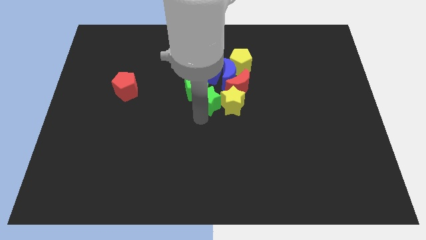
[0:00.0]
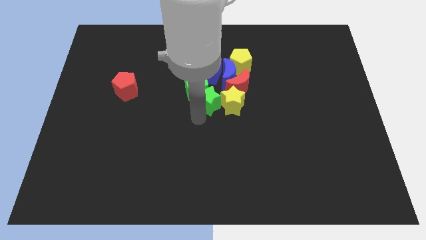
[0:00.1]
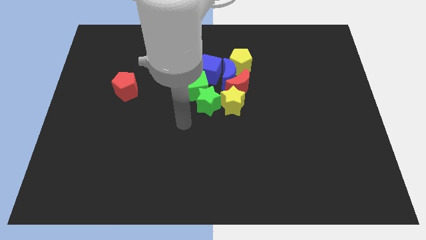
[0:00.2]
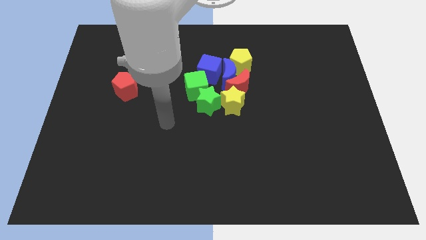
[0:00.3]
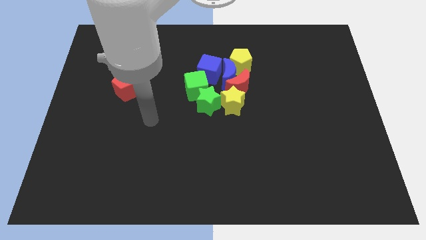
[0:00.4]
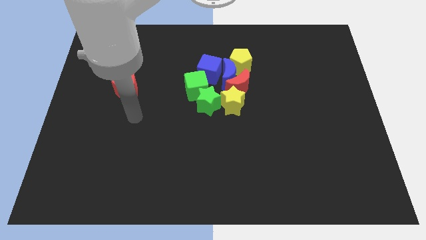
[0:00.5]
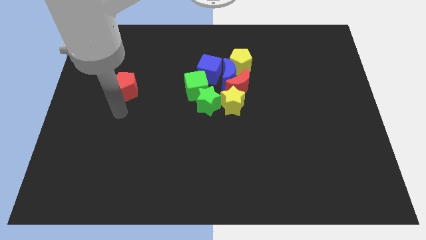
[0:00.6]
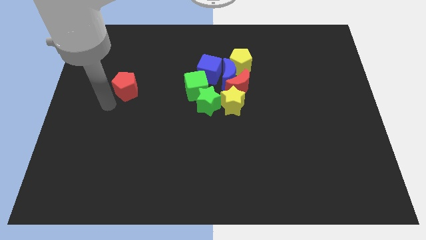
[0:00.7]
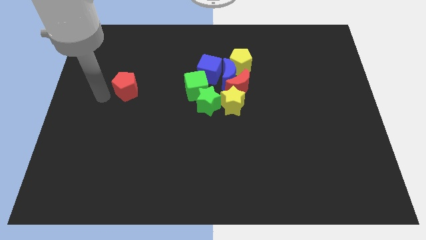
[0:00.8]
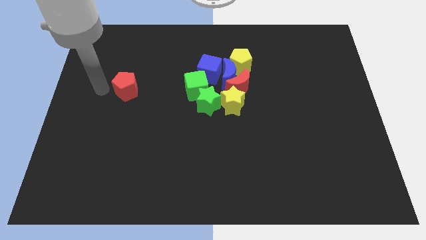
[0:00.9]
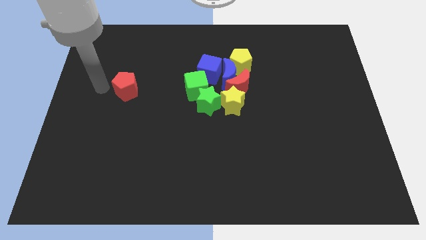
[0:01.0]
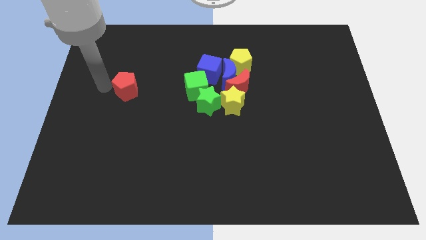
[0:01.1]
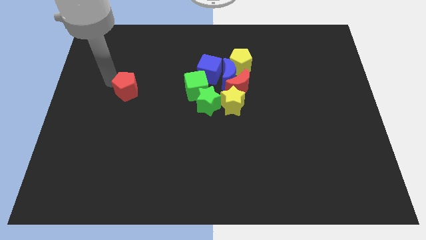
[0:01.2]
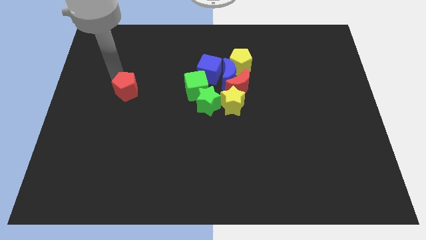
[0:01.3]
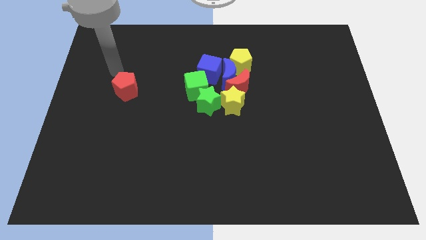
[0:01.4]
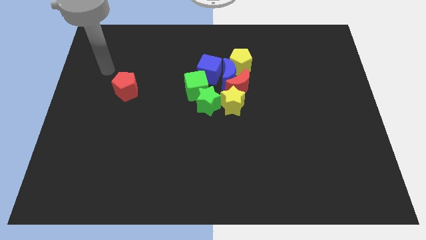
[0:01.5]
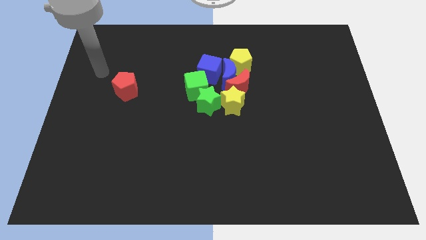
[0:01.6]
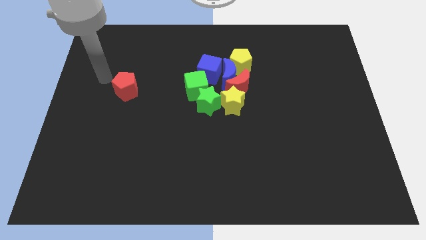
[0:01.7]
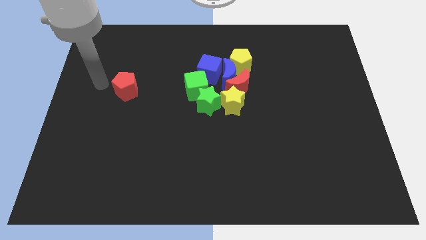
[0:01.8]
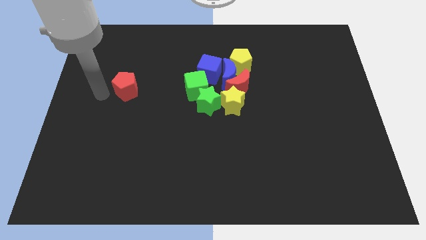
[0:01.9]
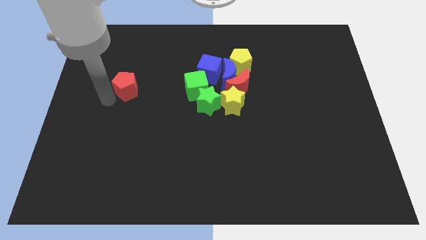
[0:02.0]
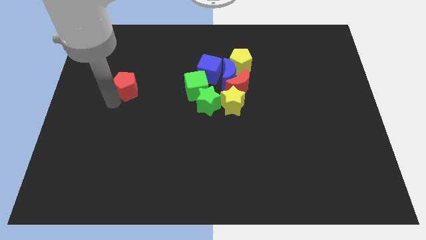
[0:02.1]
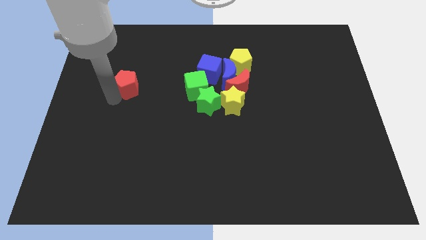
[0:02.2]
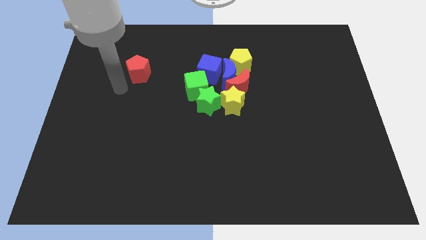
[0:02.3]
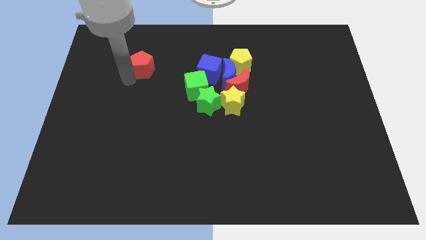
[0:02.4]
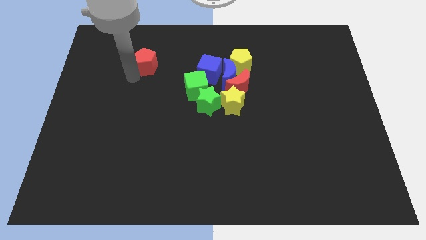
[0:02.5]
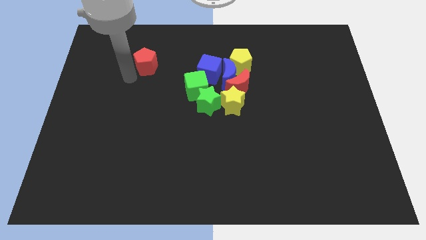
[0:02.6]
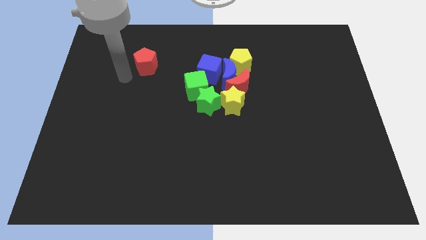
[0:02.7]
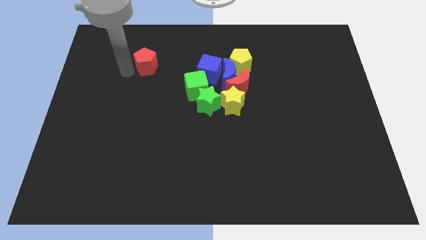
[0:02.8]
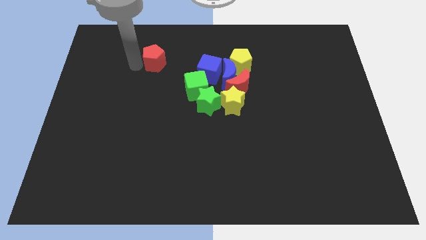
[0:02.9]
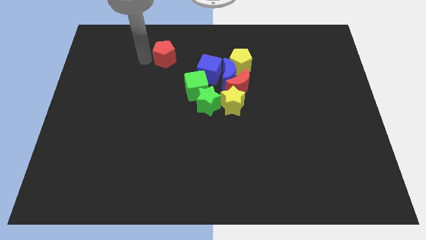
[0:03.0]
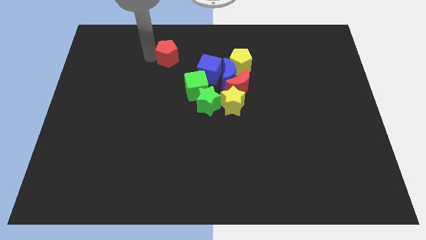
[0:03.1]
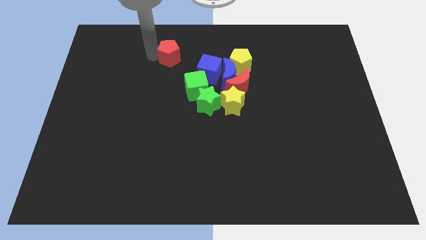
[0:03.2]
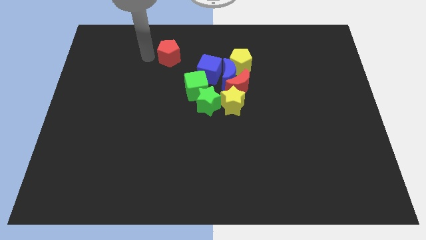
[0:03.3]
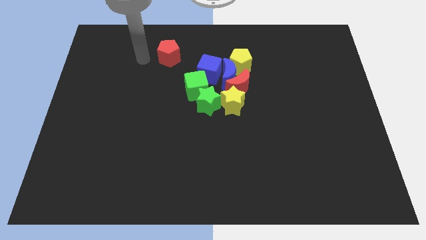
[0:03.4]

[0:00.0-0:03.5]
push the red pentagon towards the group of blocks

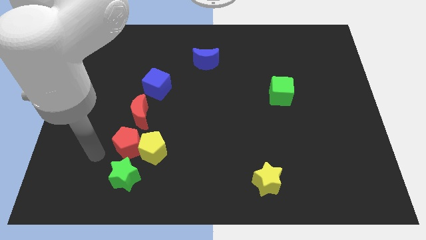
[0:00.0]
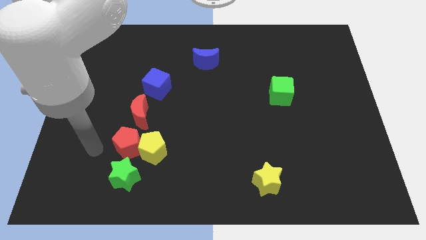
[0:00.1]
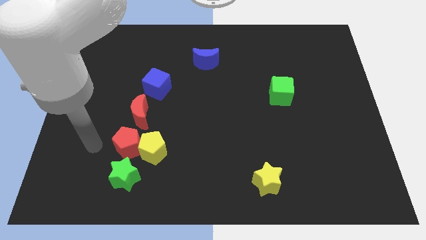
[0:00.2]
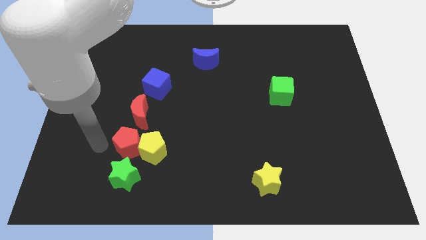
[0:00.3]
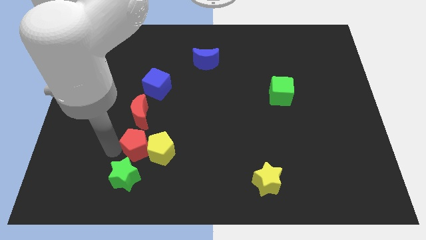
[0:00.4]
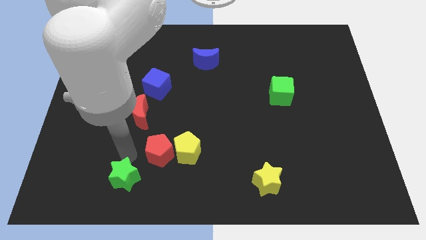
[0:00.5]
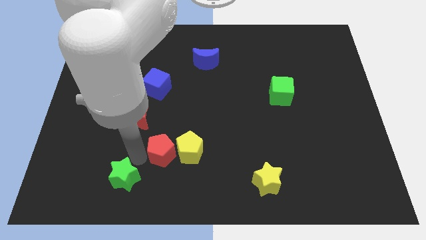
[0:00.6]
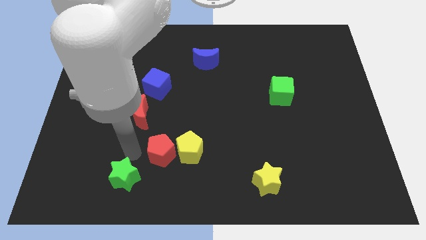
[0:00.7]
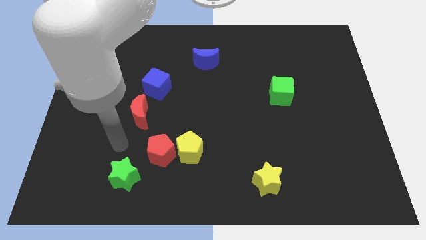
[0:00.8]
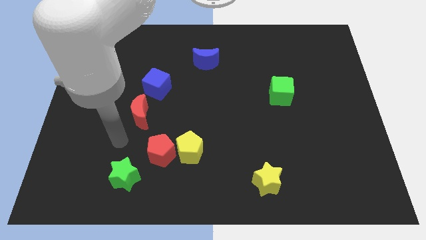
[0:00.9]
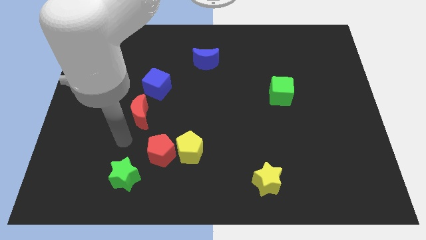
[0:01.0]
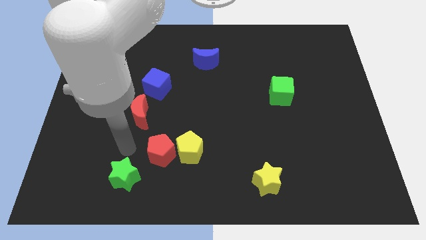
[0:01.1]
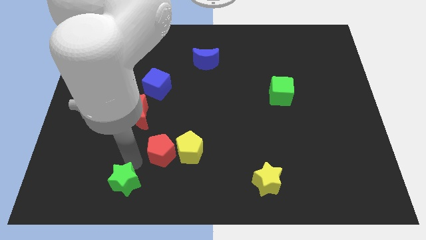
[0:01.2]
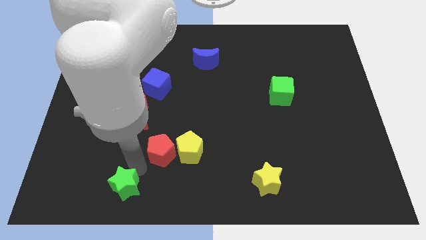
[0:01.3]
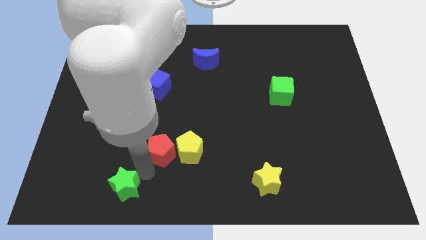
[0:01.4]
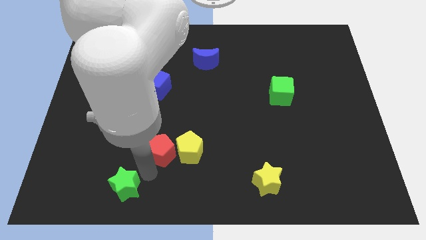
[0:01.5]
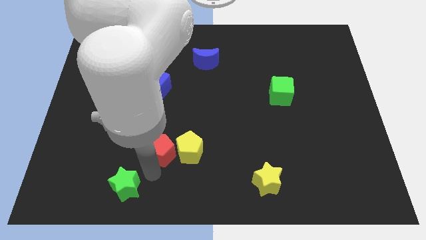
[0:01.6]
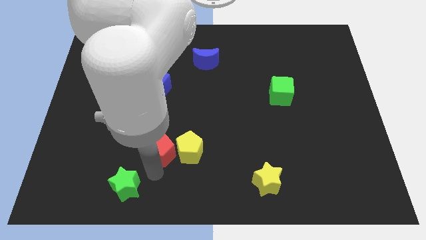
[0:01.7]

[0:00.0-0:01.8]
move the red and yellow pentagon slightly right

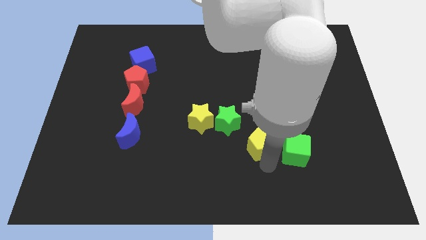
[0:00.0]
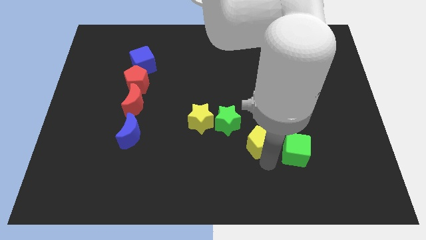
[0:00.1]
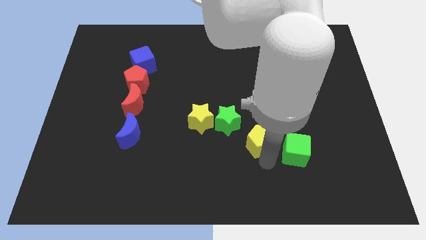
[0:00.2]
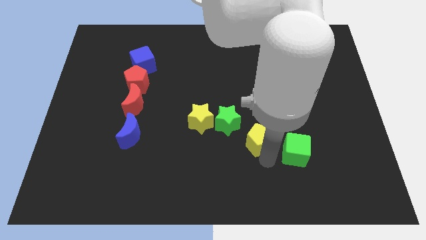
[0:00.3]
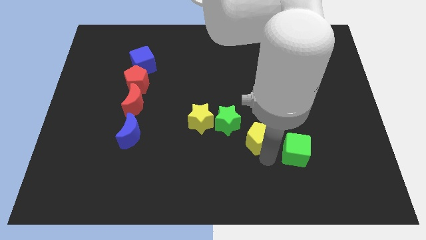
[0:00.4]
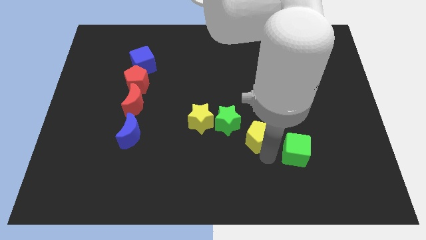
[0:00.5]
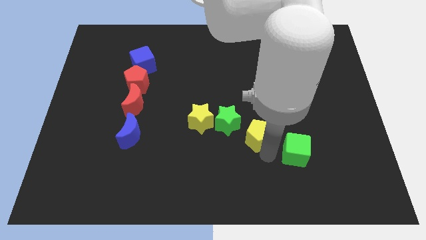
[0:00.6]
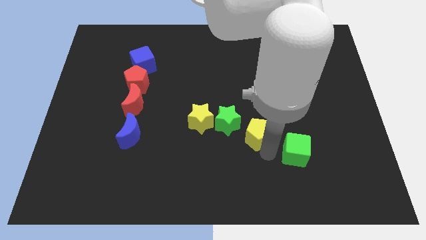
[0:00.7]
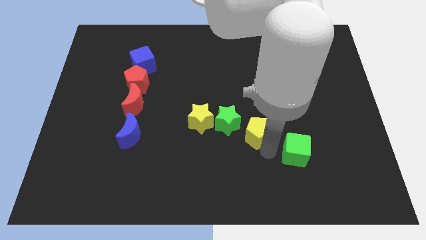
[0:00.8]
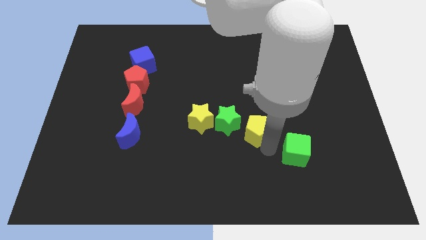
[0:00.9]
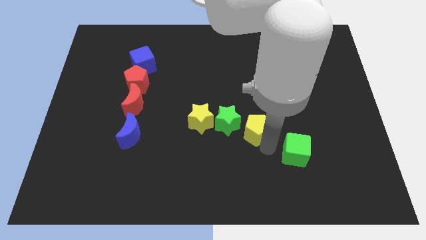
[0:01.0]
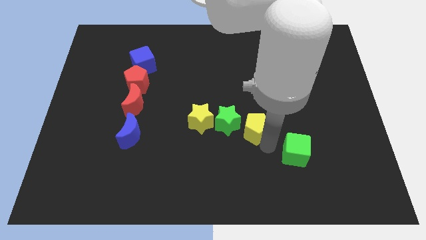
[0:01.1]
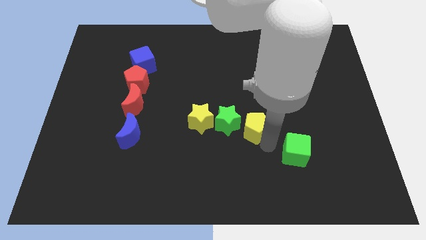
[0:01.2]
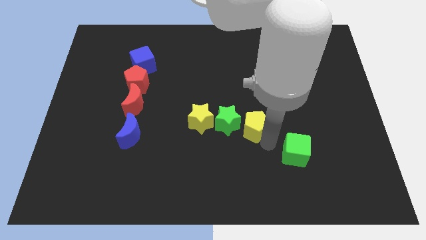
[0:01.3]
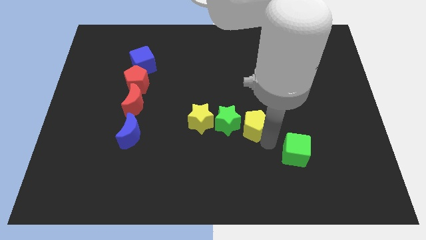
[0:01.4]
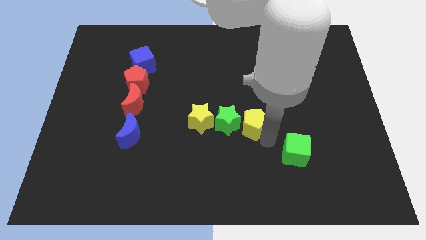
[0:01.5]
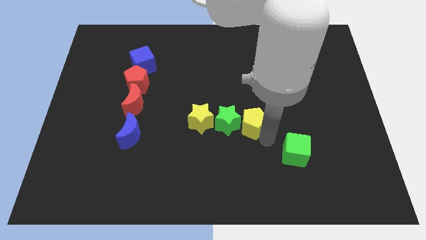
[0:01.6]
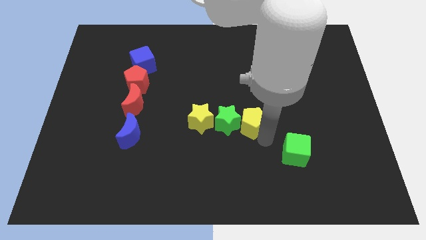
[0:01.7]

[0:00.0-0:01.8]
move the yellow pentagon horizontally to the right side of the green star

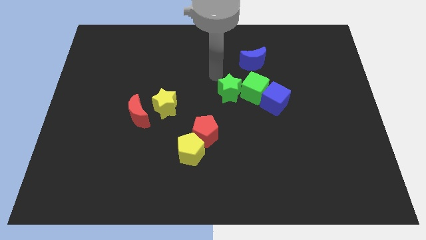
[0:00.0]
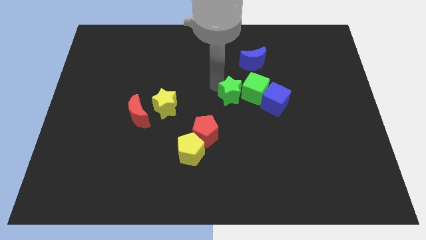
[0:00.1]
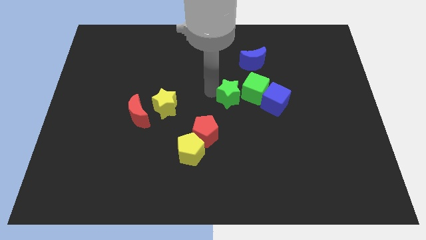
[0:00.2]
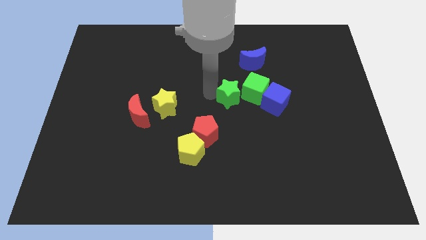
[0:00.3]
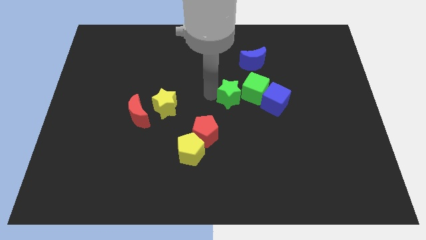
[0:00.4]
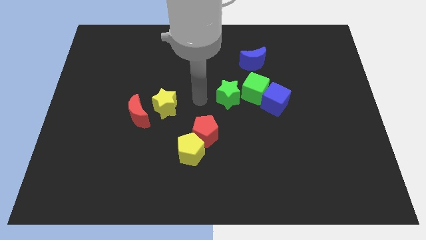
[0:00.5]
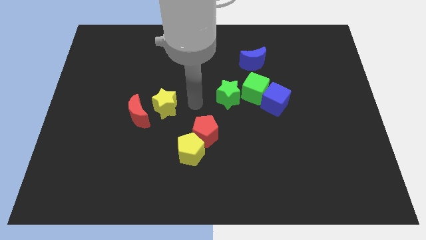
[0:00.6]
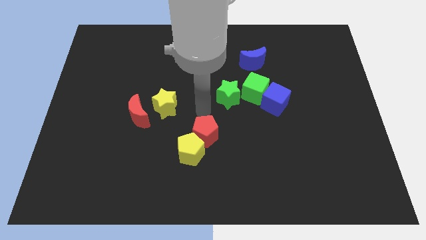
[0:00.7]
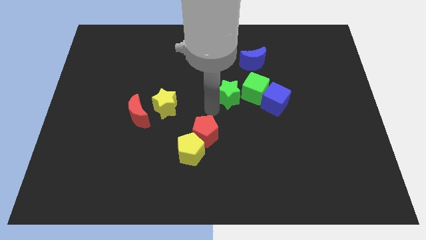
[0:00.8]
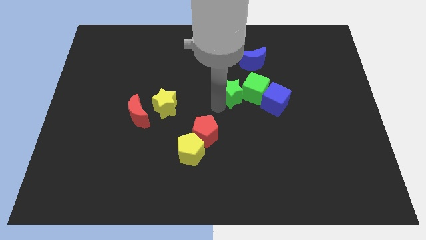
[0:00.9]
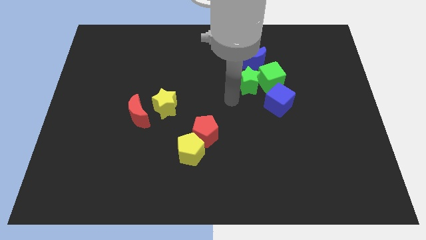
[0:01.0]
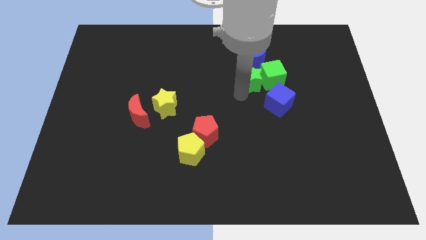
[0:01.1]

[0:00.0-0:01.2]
place green star below blue crescent

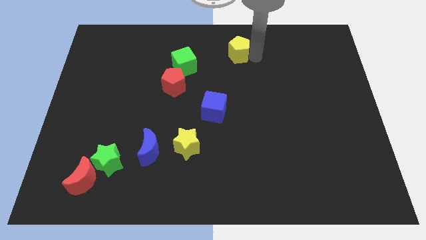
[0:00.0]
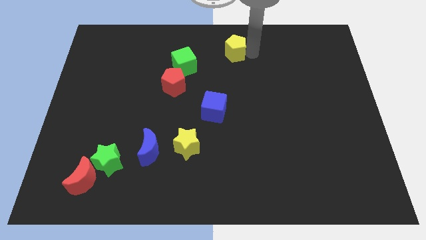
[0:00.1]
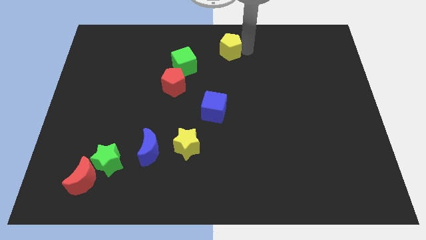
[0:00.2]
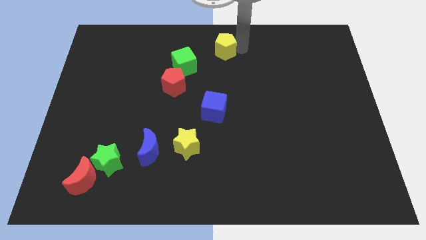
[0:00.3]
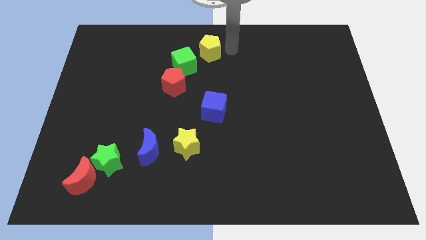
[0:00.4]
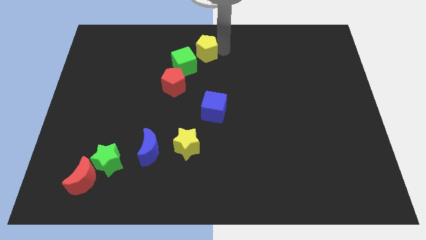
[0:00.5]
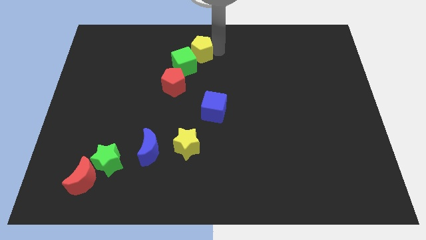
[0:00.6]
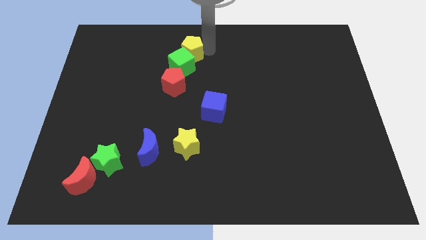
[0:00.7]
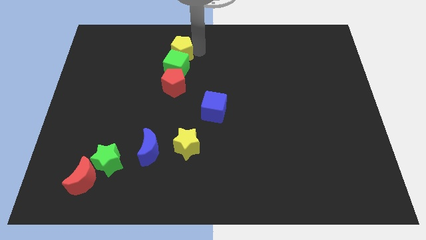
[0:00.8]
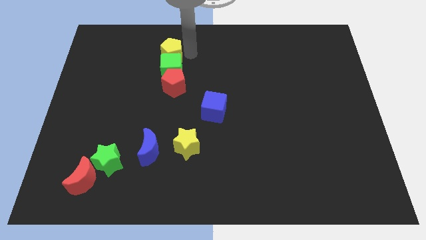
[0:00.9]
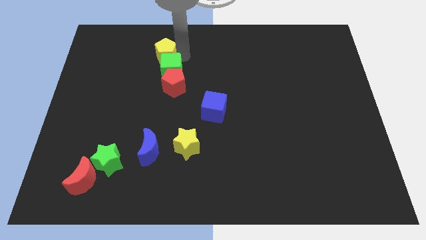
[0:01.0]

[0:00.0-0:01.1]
place the yellow pentagon on top of the green cube
